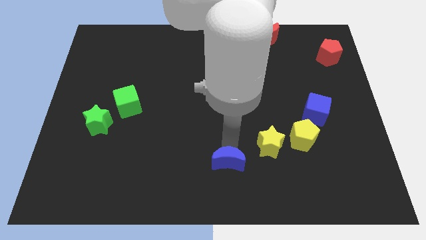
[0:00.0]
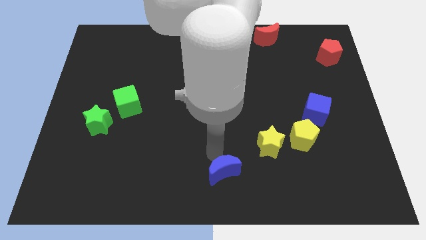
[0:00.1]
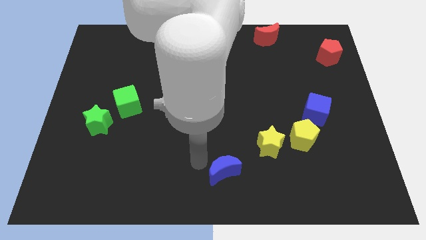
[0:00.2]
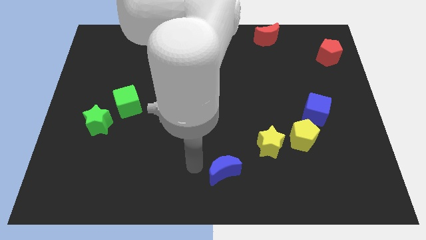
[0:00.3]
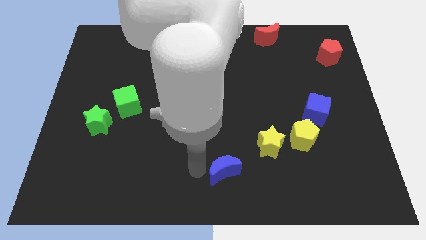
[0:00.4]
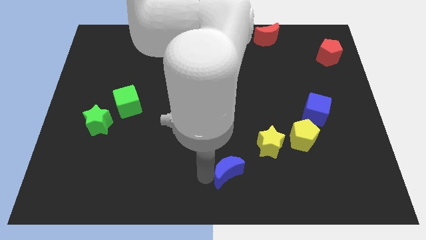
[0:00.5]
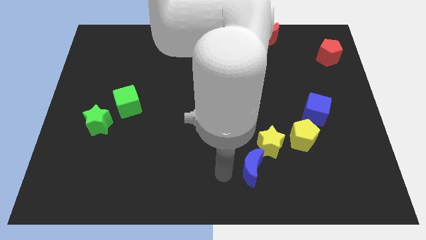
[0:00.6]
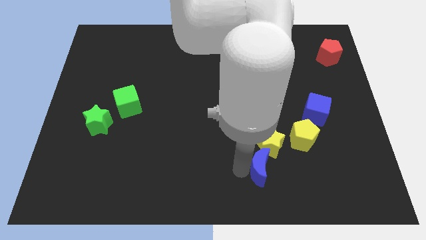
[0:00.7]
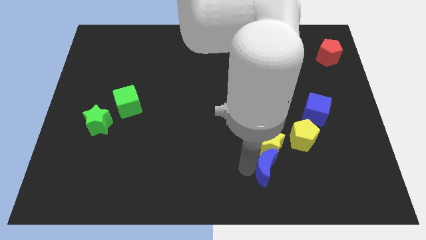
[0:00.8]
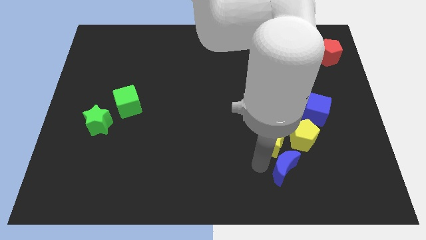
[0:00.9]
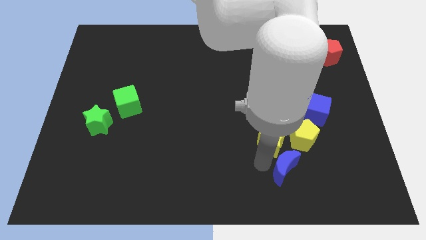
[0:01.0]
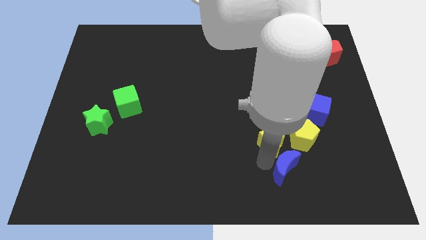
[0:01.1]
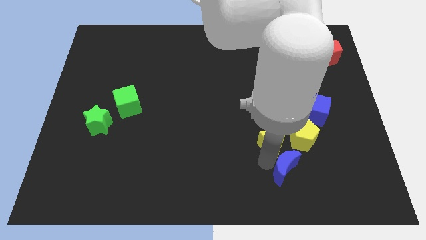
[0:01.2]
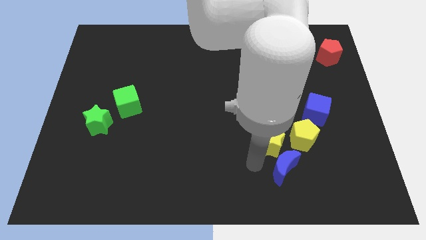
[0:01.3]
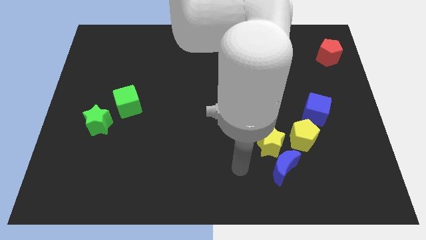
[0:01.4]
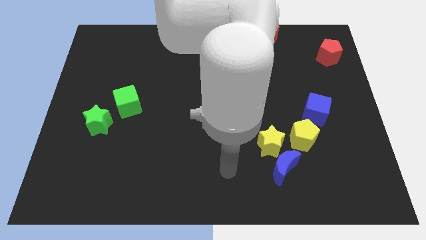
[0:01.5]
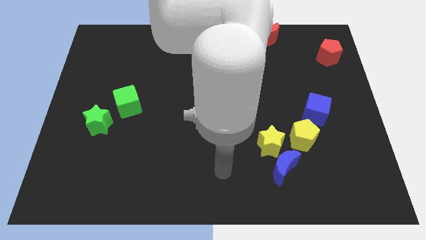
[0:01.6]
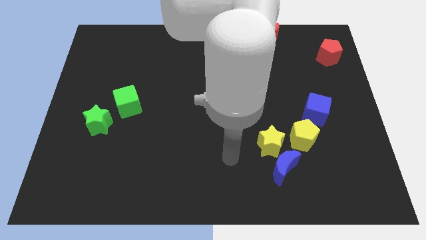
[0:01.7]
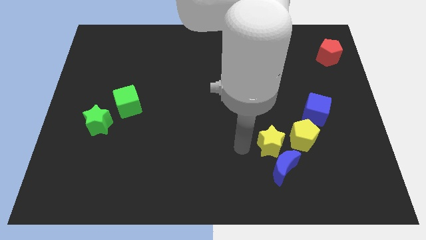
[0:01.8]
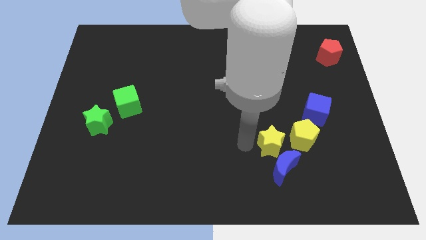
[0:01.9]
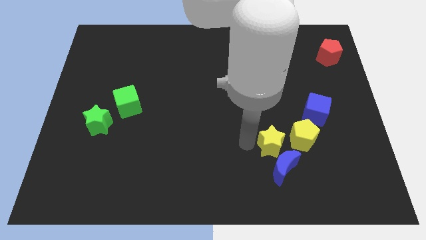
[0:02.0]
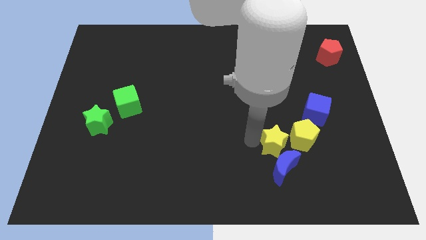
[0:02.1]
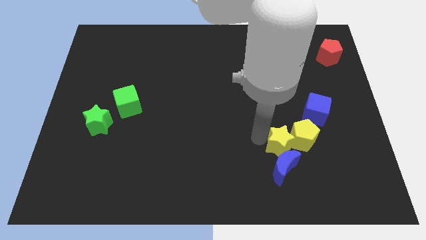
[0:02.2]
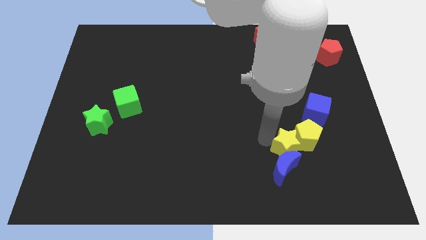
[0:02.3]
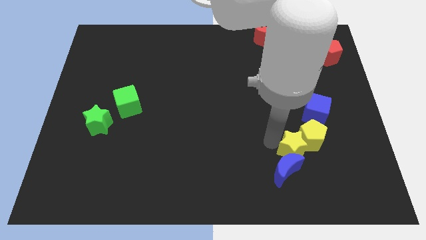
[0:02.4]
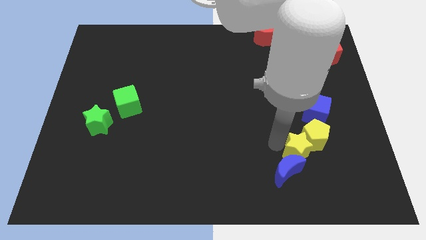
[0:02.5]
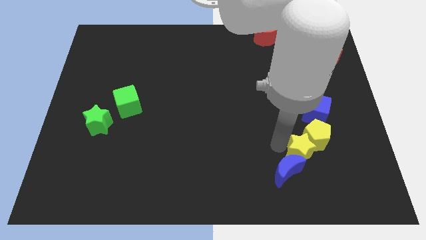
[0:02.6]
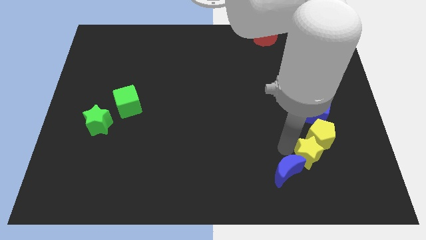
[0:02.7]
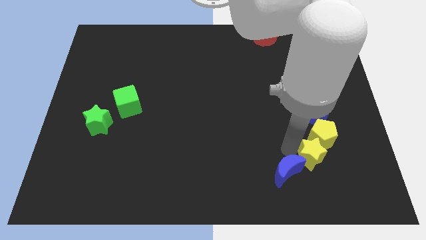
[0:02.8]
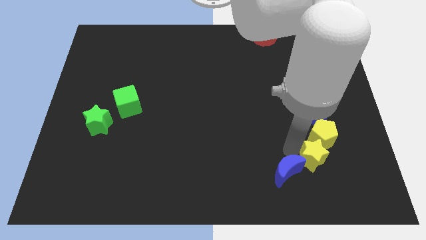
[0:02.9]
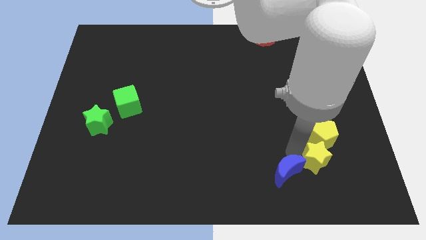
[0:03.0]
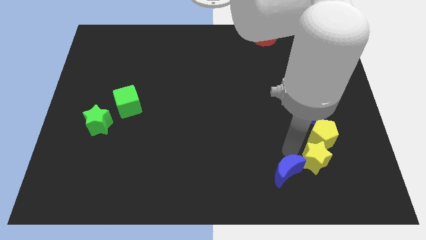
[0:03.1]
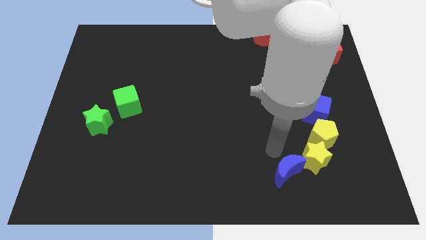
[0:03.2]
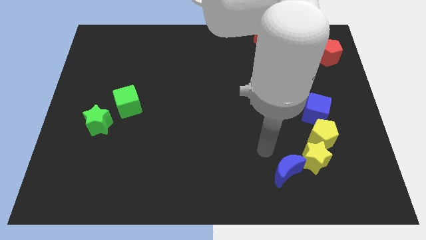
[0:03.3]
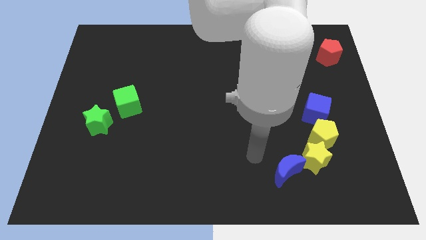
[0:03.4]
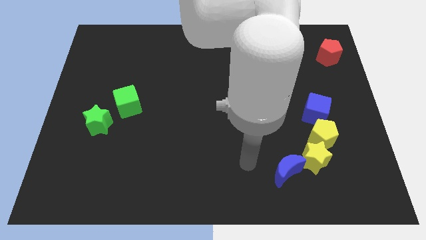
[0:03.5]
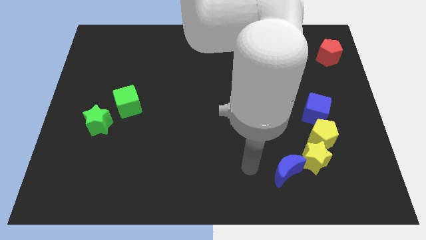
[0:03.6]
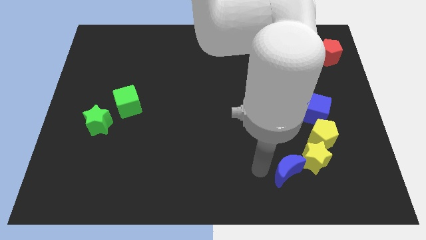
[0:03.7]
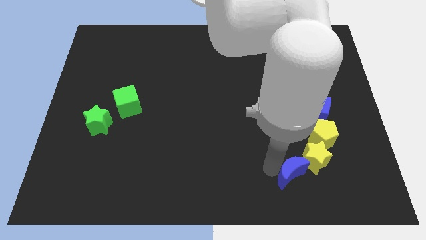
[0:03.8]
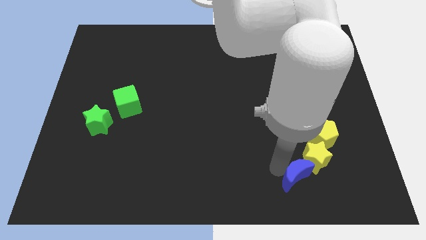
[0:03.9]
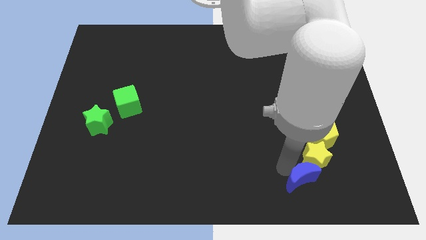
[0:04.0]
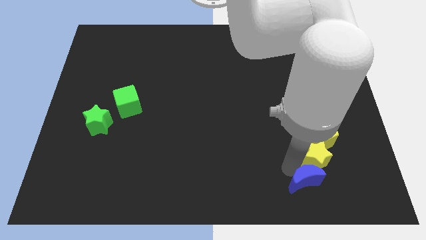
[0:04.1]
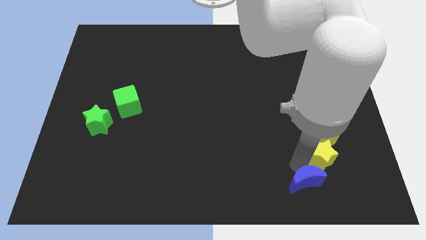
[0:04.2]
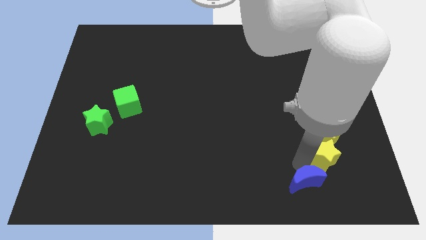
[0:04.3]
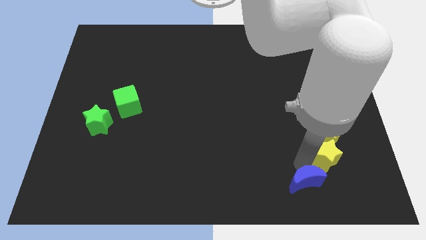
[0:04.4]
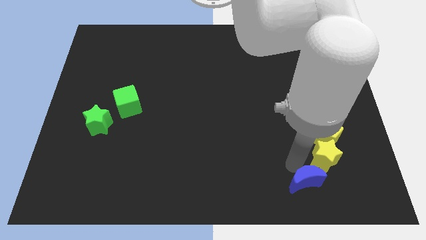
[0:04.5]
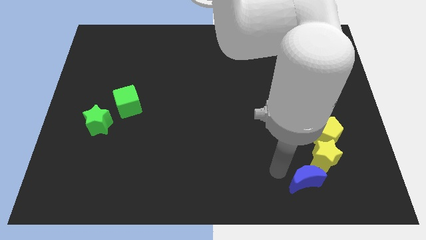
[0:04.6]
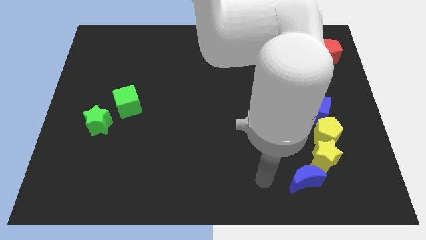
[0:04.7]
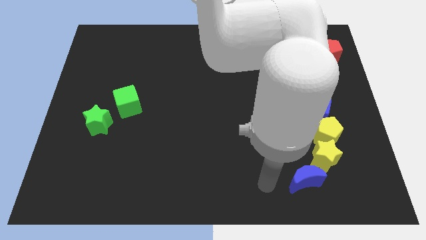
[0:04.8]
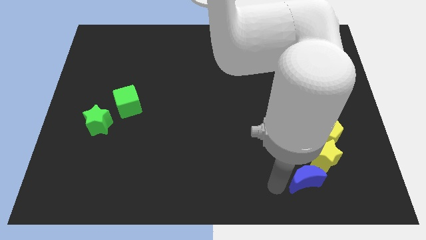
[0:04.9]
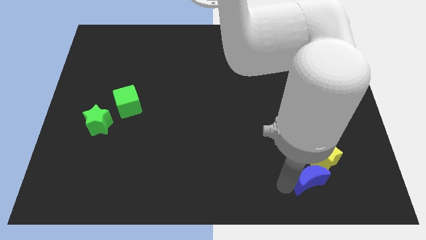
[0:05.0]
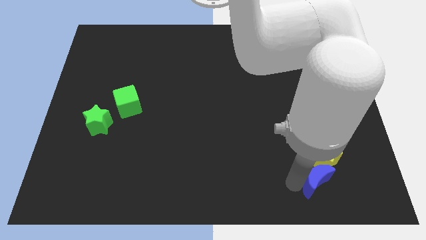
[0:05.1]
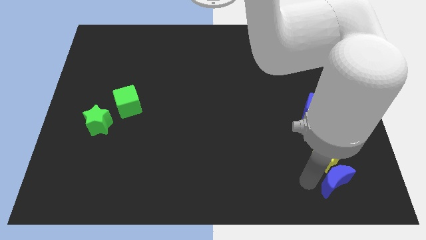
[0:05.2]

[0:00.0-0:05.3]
move the yellow blocks and the blue crescent to the bottom of the blue cube

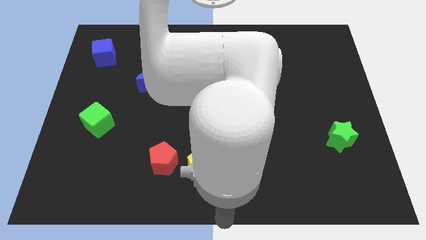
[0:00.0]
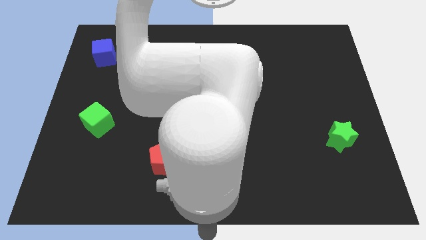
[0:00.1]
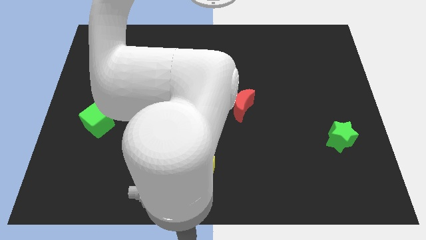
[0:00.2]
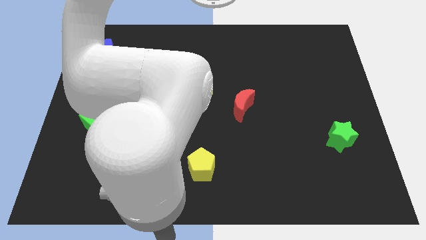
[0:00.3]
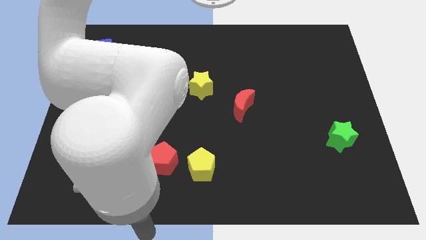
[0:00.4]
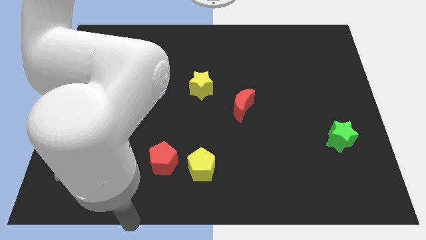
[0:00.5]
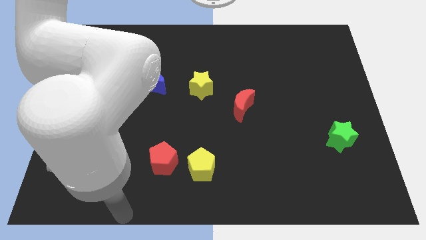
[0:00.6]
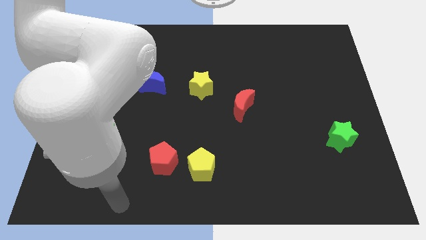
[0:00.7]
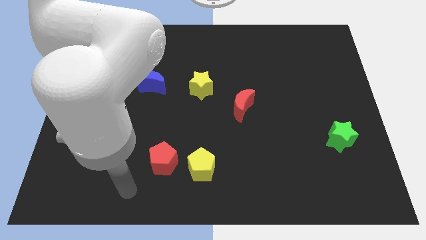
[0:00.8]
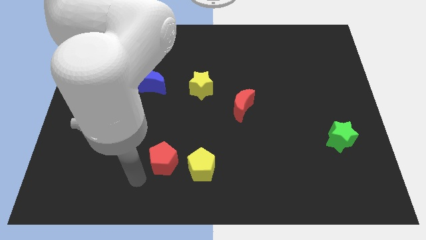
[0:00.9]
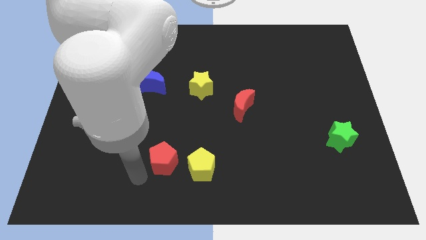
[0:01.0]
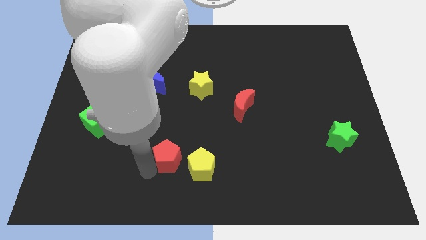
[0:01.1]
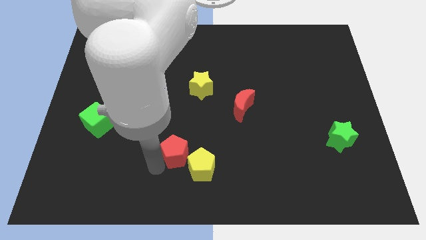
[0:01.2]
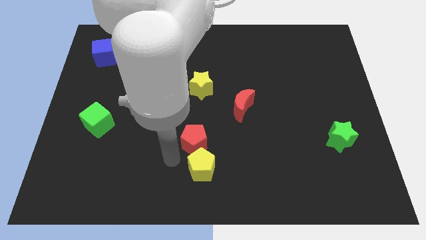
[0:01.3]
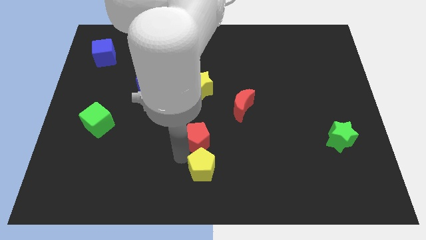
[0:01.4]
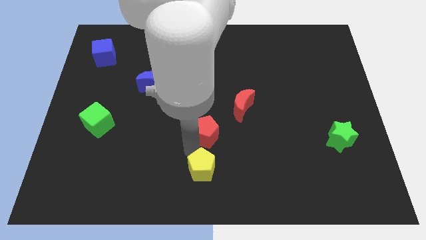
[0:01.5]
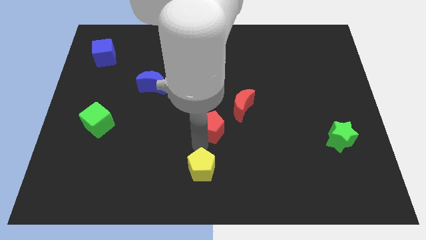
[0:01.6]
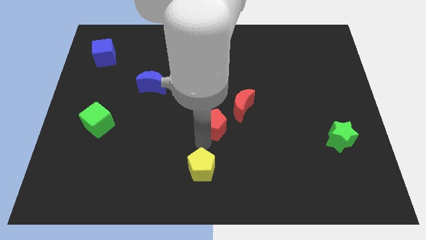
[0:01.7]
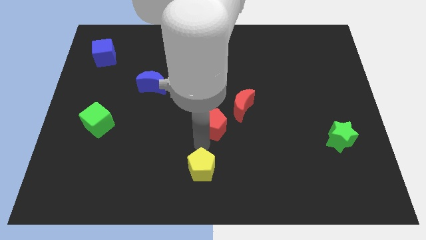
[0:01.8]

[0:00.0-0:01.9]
move the red pentagon closer to the red crescent

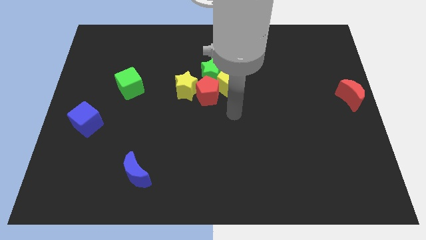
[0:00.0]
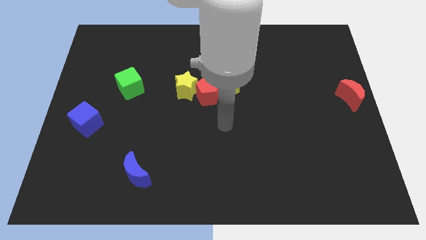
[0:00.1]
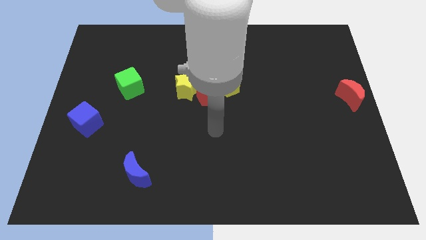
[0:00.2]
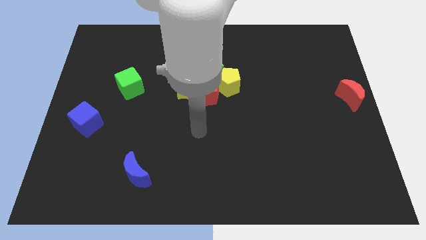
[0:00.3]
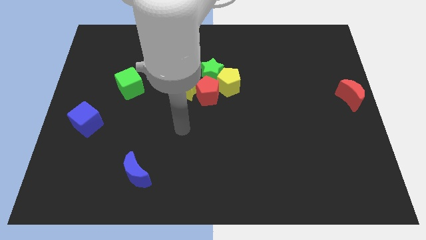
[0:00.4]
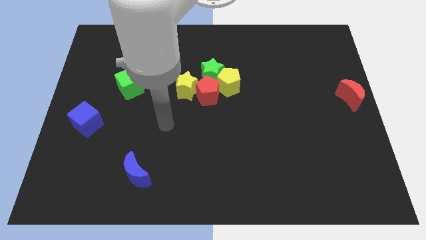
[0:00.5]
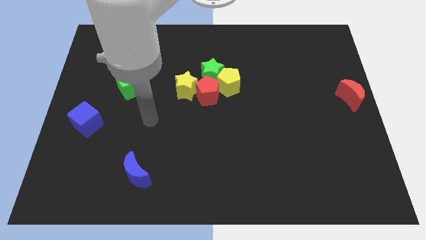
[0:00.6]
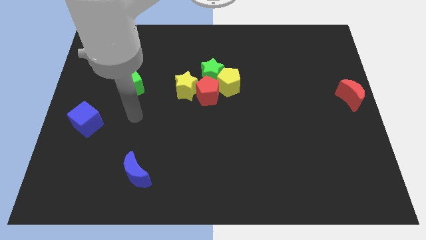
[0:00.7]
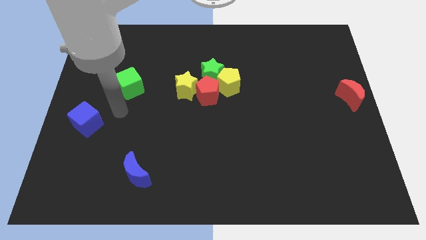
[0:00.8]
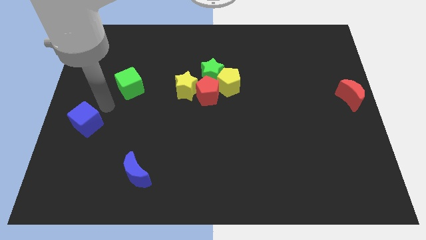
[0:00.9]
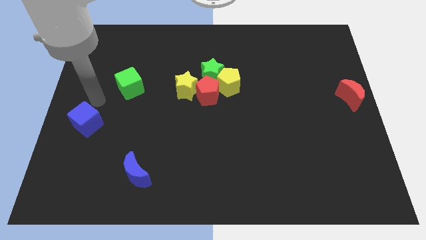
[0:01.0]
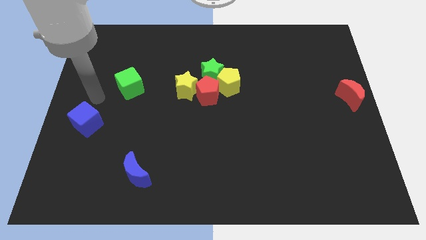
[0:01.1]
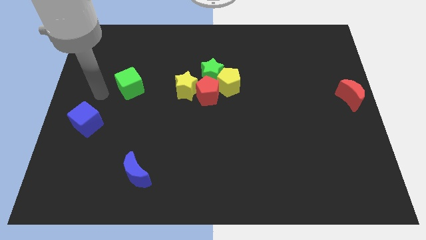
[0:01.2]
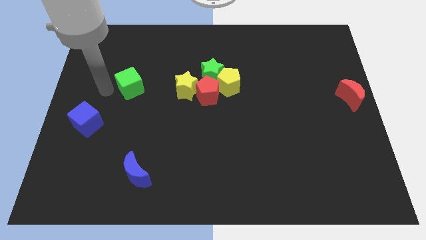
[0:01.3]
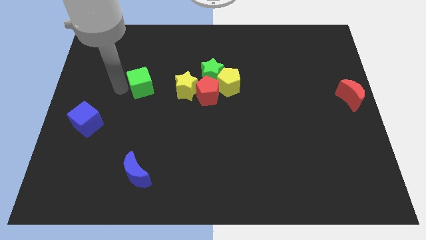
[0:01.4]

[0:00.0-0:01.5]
move your arm to the left of green cube

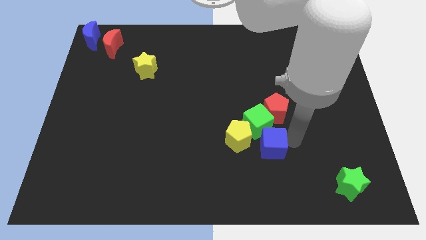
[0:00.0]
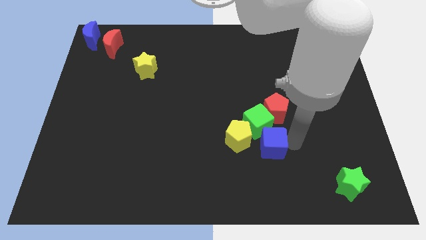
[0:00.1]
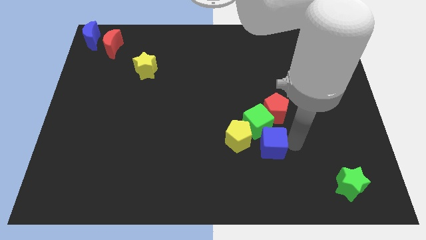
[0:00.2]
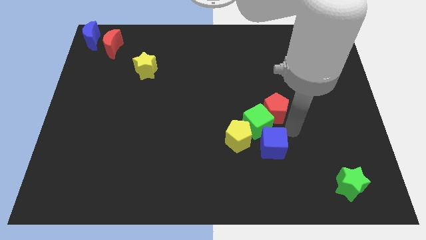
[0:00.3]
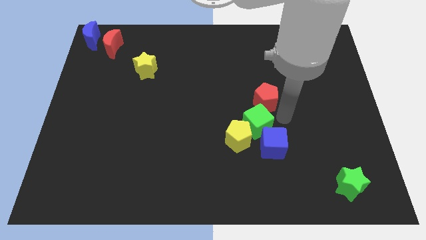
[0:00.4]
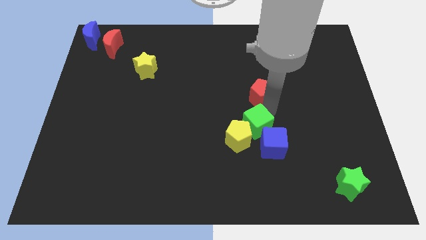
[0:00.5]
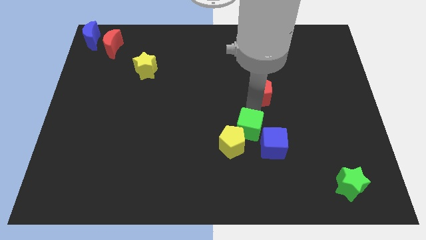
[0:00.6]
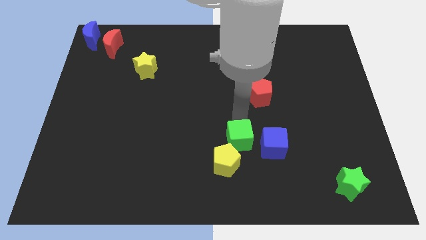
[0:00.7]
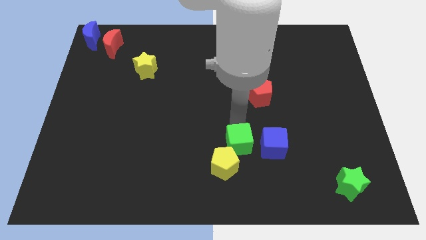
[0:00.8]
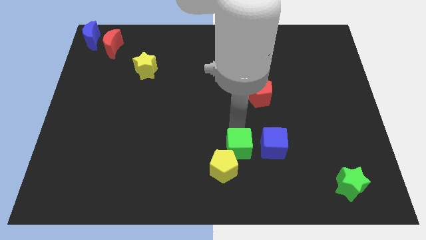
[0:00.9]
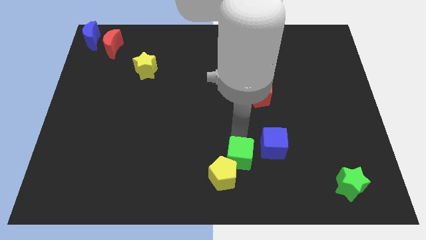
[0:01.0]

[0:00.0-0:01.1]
move the green cube and yellow pentagon away from the red pentagon
